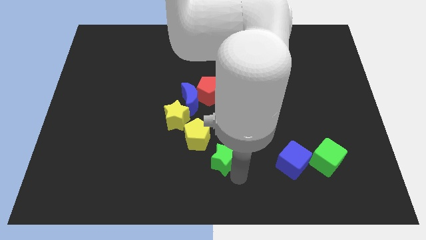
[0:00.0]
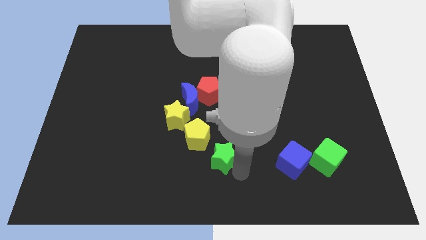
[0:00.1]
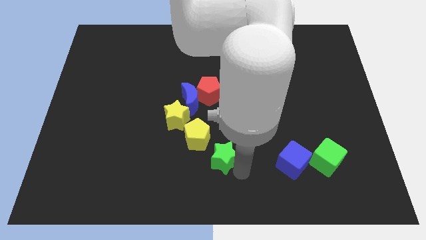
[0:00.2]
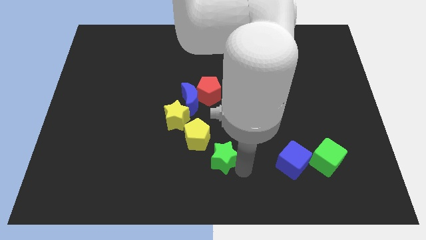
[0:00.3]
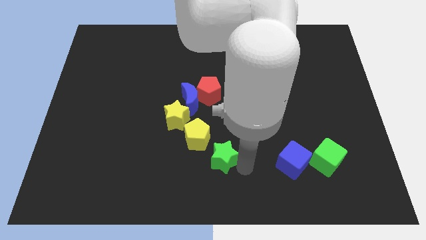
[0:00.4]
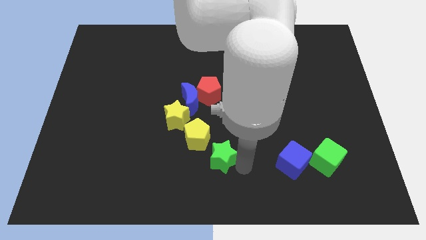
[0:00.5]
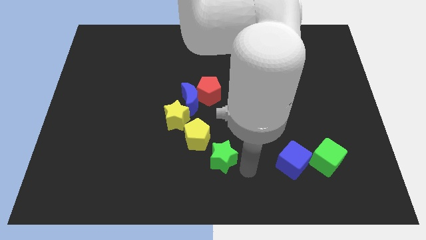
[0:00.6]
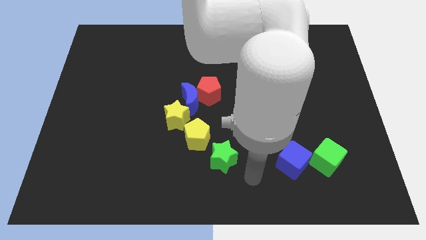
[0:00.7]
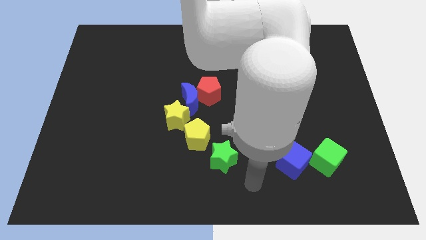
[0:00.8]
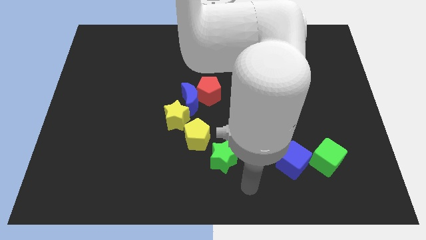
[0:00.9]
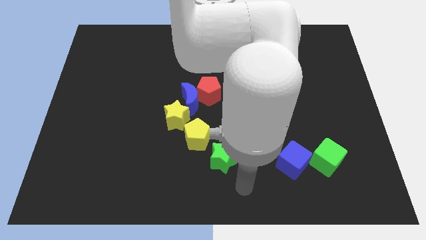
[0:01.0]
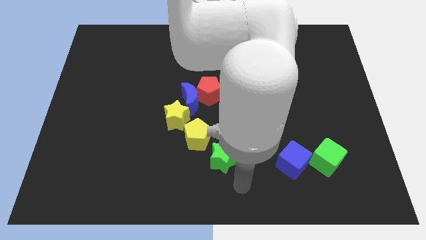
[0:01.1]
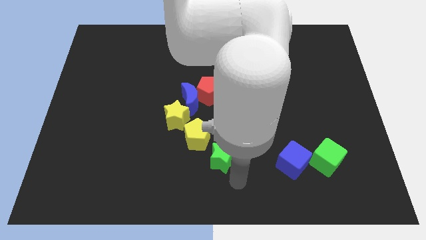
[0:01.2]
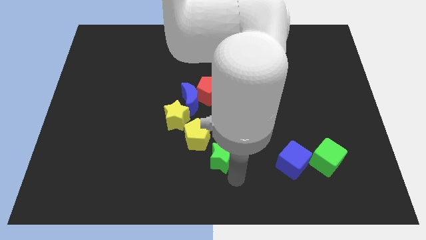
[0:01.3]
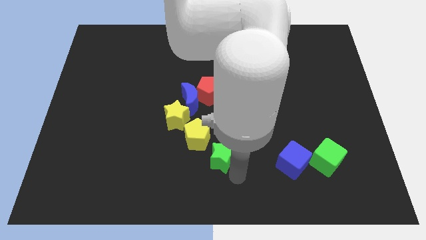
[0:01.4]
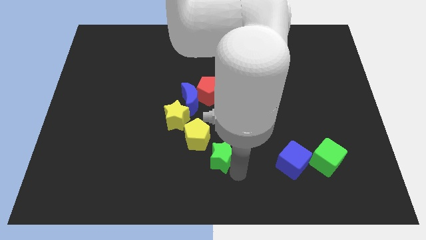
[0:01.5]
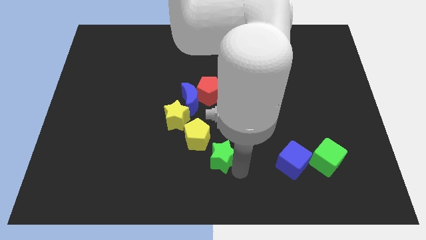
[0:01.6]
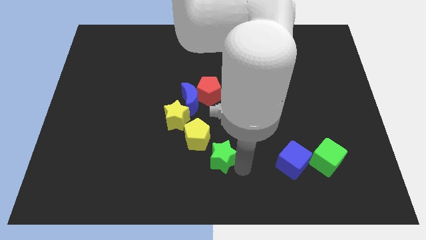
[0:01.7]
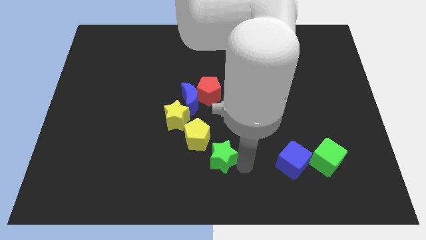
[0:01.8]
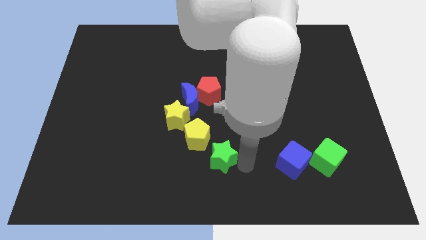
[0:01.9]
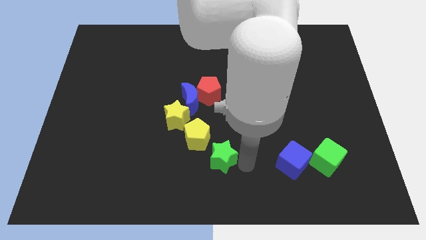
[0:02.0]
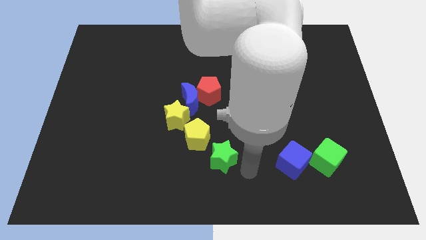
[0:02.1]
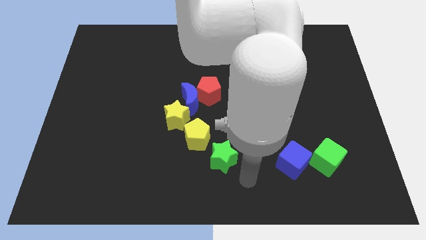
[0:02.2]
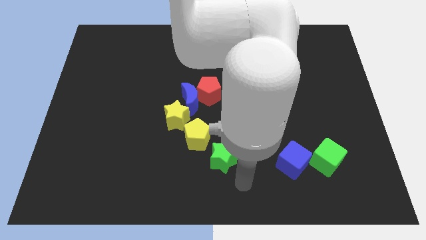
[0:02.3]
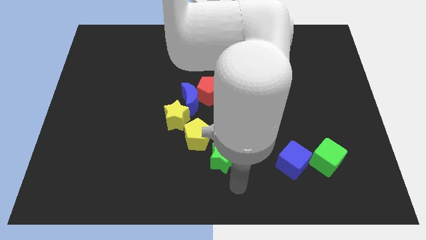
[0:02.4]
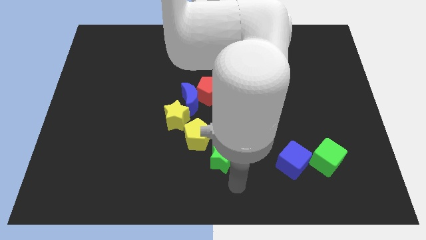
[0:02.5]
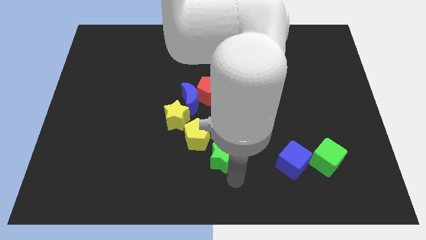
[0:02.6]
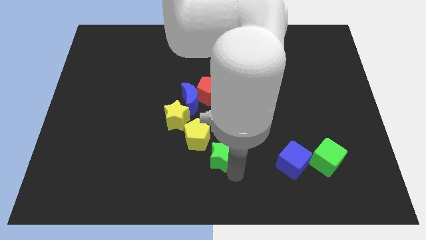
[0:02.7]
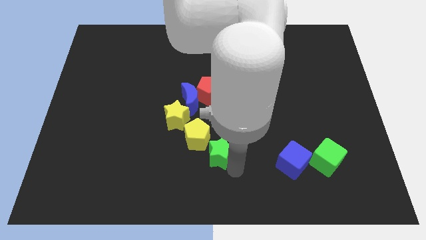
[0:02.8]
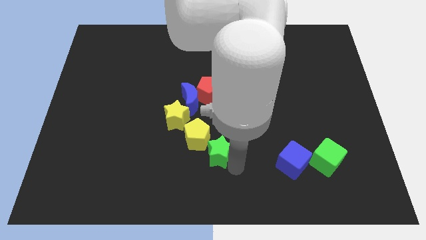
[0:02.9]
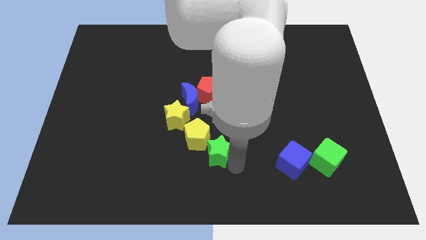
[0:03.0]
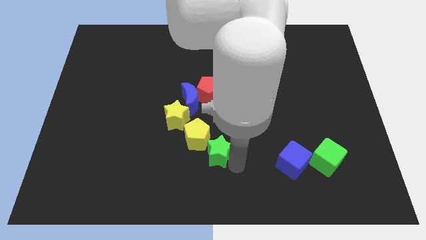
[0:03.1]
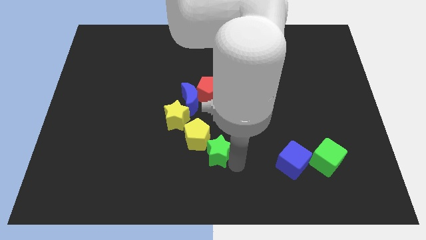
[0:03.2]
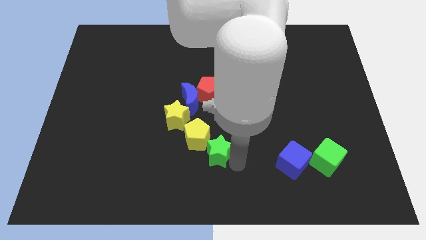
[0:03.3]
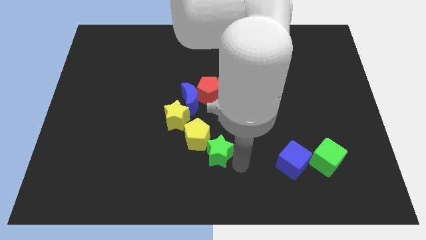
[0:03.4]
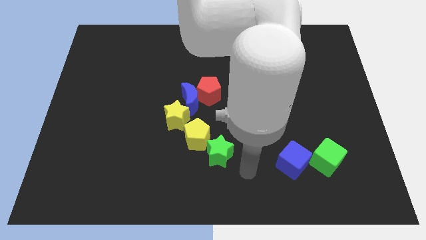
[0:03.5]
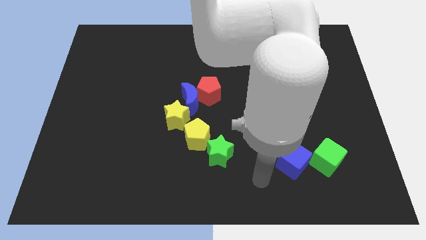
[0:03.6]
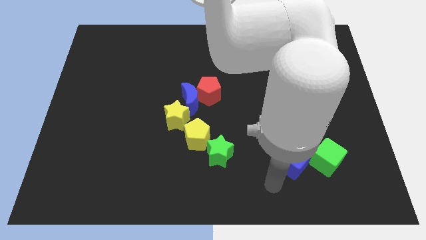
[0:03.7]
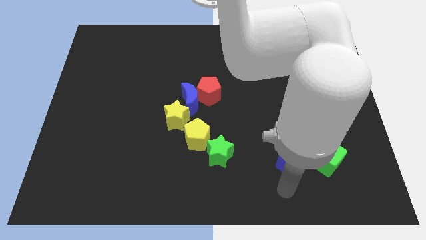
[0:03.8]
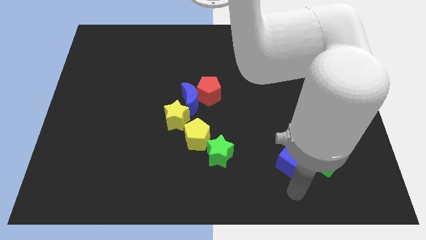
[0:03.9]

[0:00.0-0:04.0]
slightly push the green star towards the bottom right of the yellow pentagon

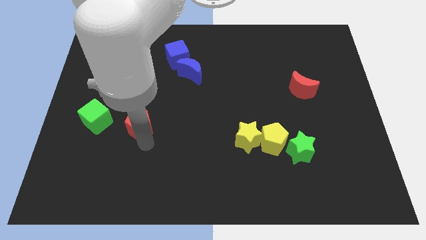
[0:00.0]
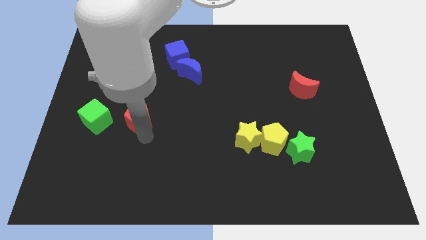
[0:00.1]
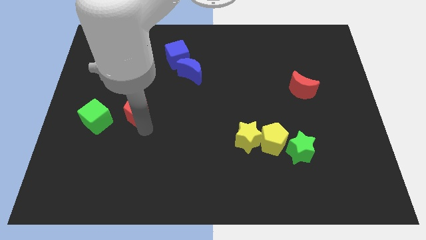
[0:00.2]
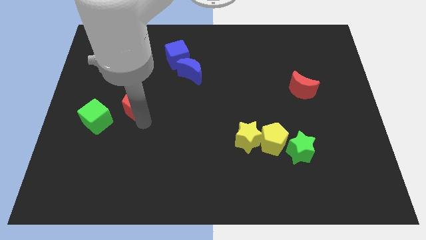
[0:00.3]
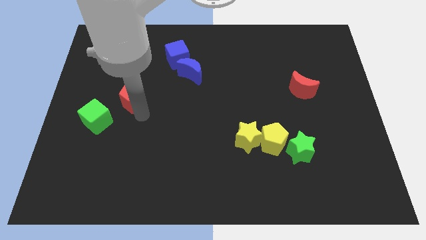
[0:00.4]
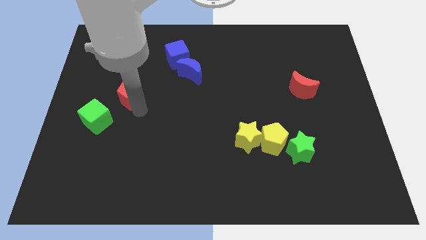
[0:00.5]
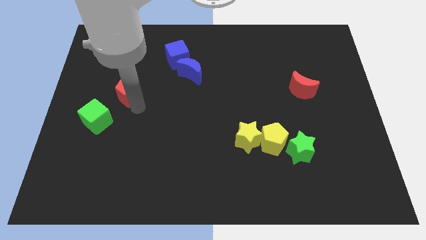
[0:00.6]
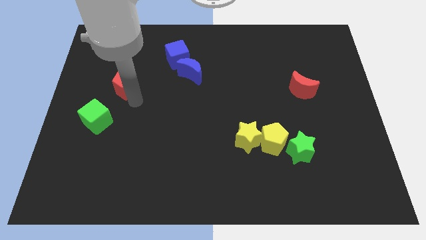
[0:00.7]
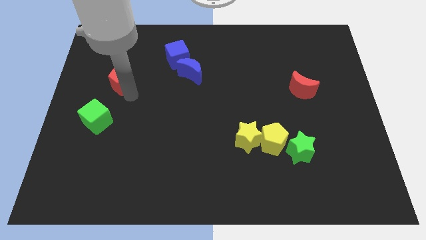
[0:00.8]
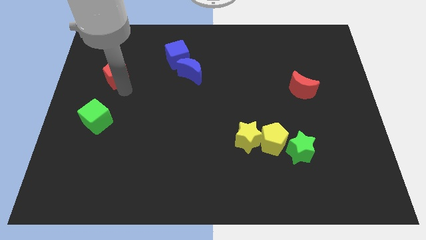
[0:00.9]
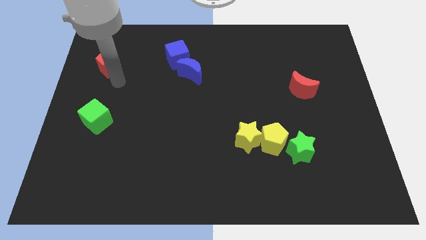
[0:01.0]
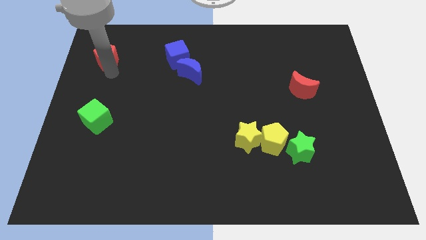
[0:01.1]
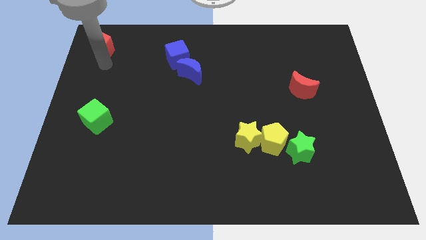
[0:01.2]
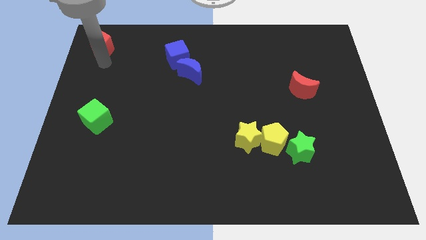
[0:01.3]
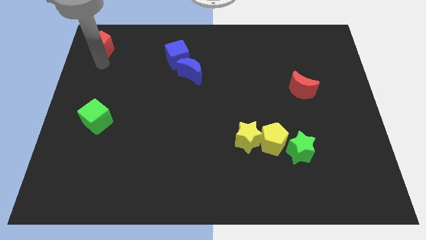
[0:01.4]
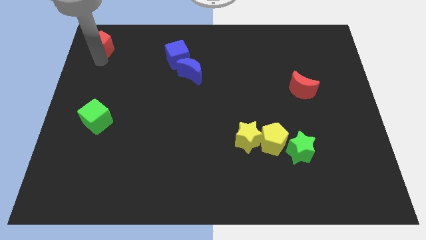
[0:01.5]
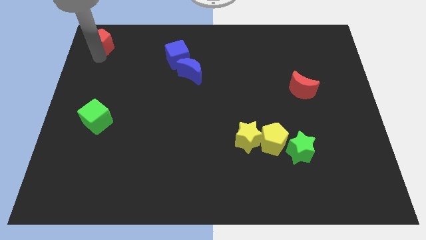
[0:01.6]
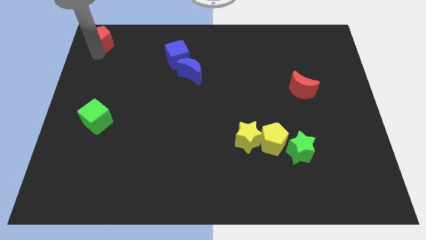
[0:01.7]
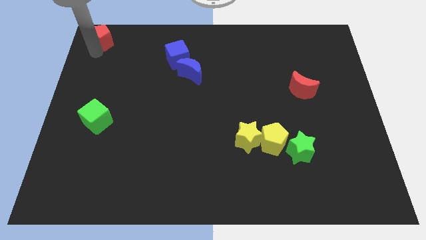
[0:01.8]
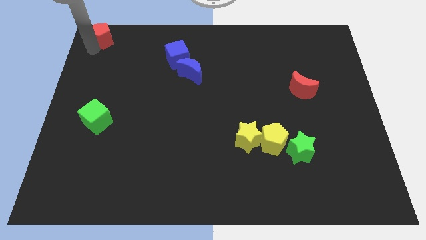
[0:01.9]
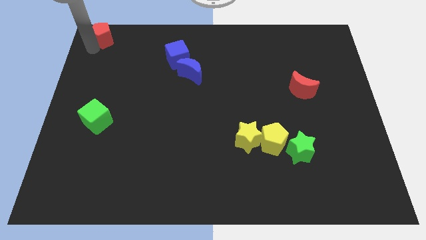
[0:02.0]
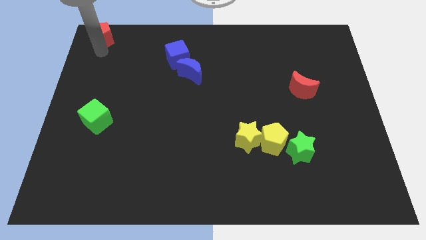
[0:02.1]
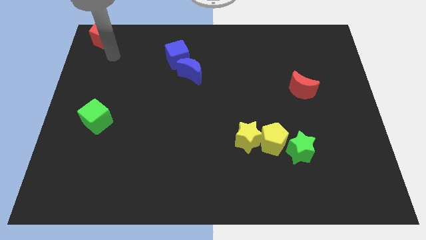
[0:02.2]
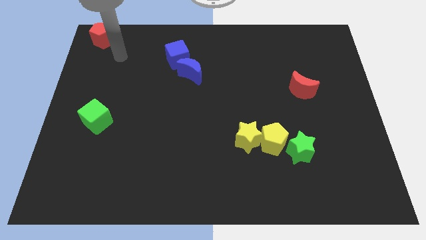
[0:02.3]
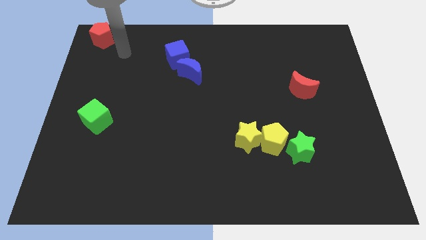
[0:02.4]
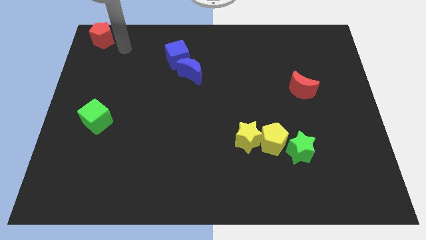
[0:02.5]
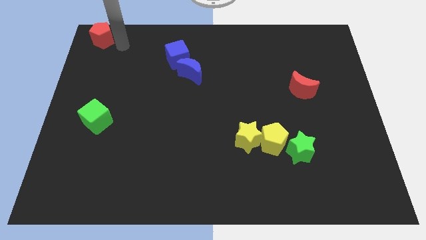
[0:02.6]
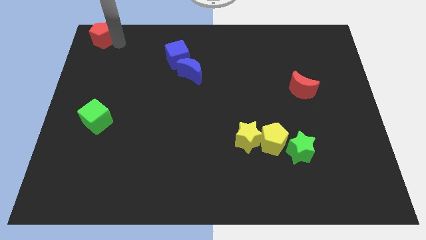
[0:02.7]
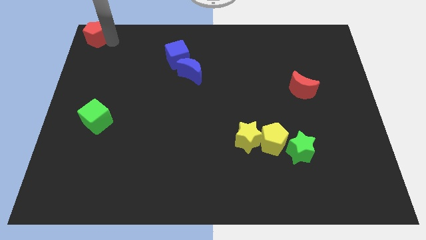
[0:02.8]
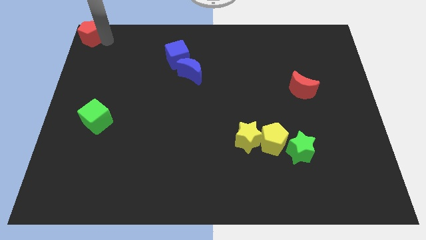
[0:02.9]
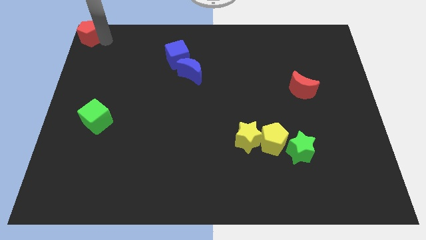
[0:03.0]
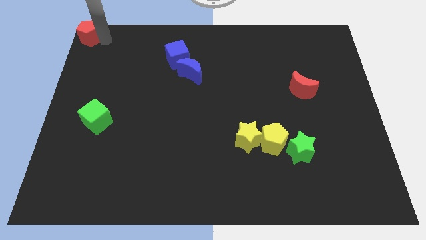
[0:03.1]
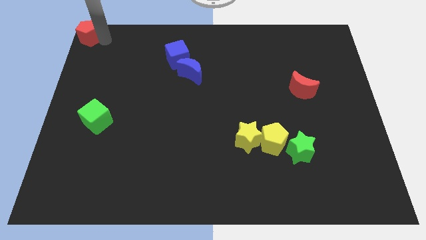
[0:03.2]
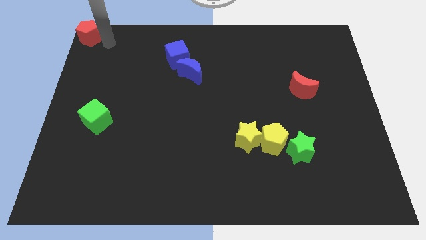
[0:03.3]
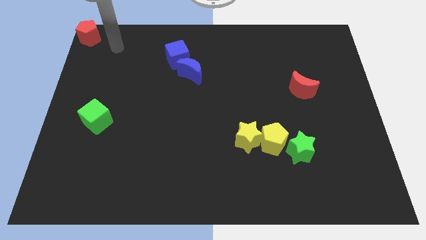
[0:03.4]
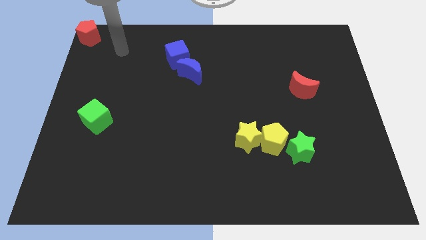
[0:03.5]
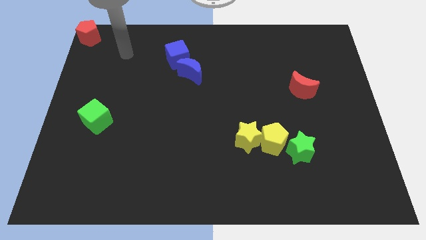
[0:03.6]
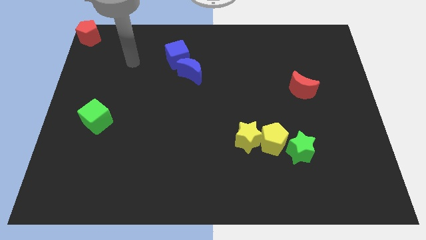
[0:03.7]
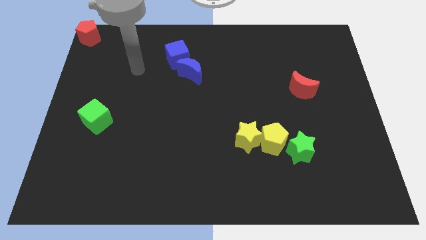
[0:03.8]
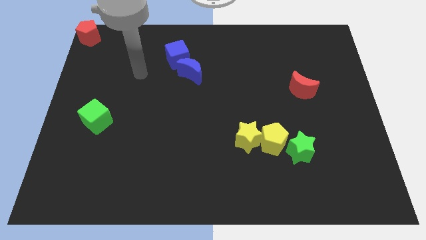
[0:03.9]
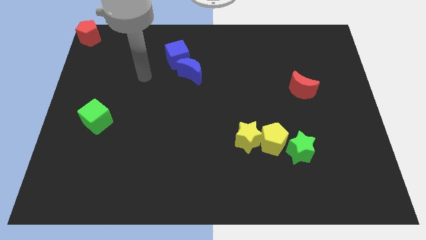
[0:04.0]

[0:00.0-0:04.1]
slide the red pentagon to the top left of the board

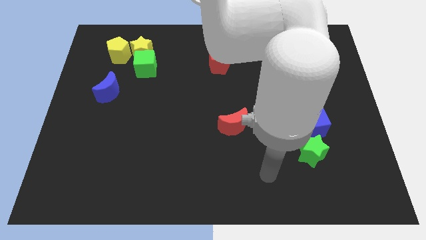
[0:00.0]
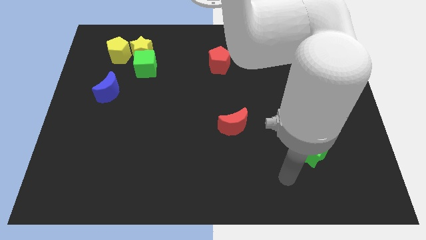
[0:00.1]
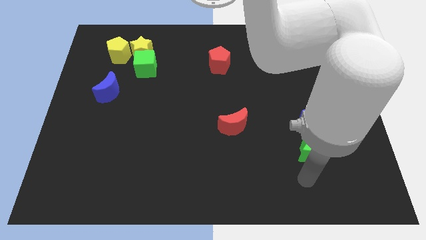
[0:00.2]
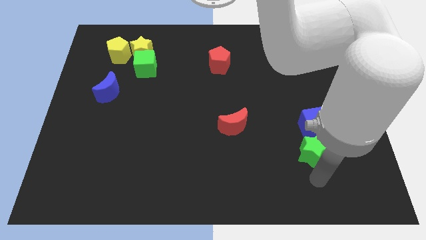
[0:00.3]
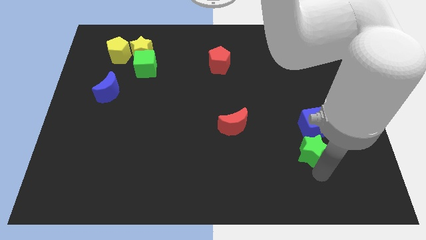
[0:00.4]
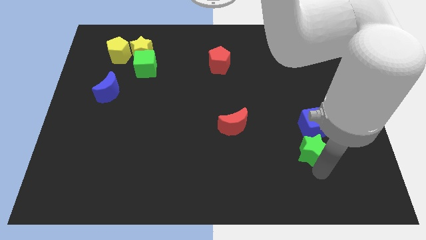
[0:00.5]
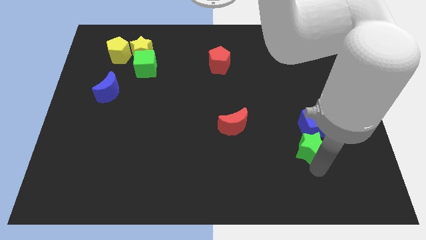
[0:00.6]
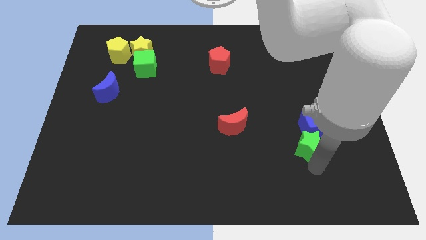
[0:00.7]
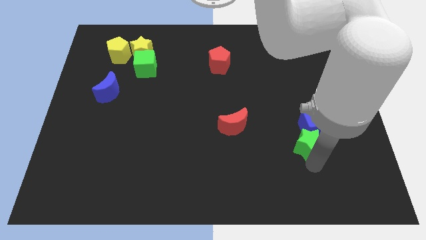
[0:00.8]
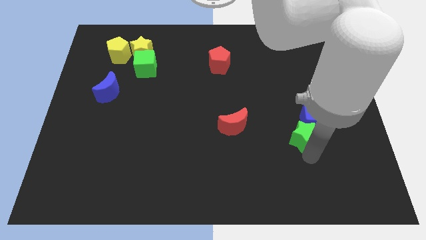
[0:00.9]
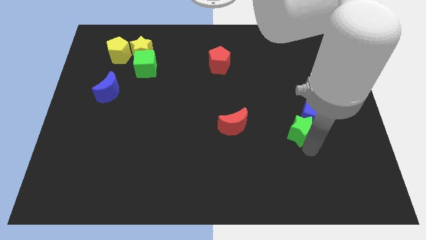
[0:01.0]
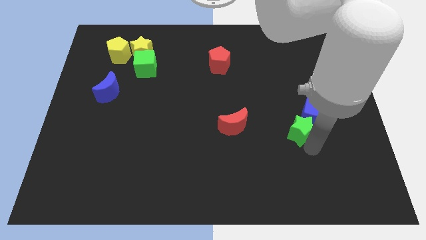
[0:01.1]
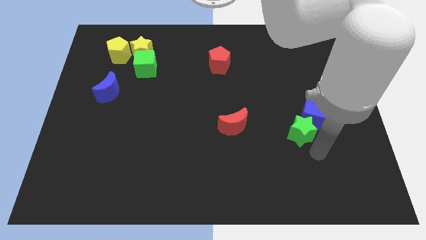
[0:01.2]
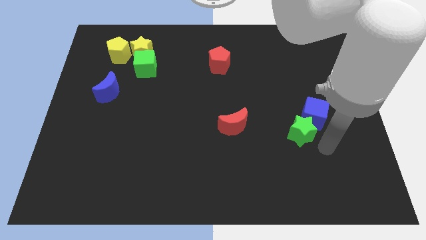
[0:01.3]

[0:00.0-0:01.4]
drag the green star slightly upwards
